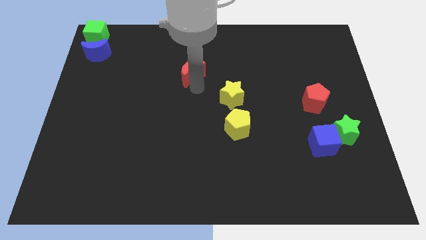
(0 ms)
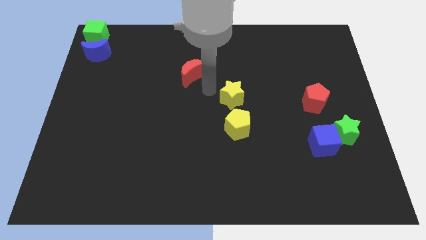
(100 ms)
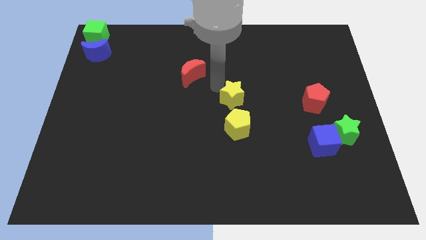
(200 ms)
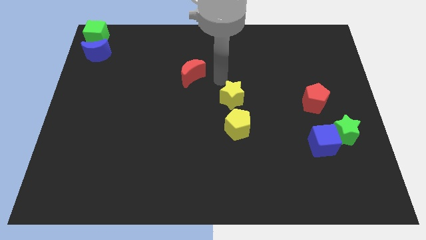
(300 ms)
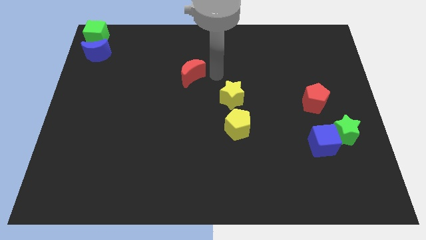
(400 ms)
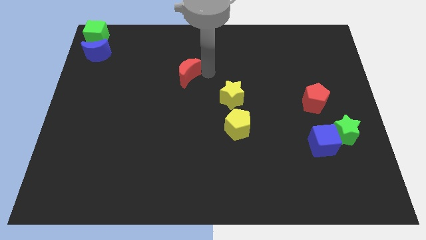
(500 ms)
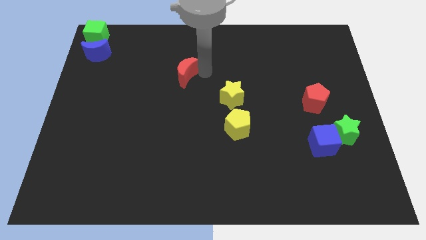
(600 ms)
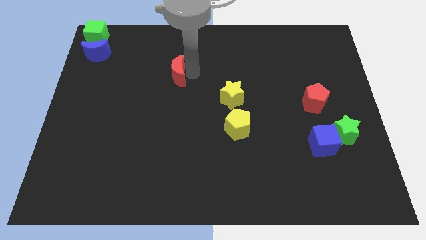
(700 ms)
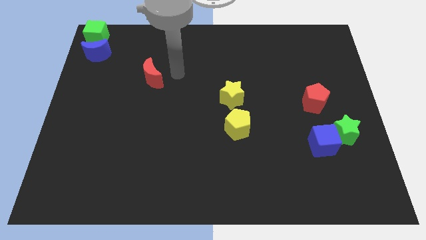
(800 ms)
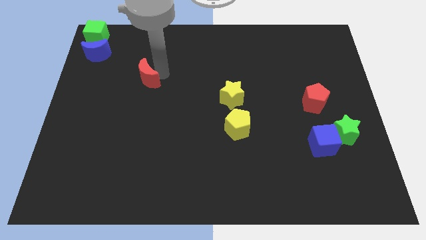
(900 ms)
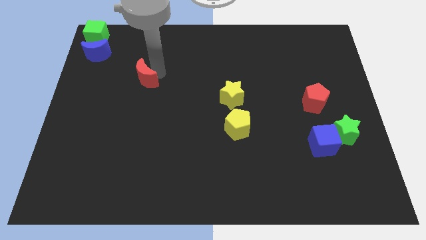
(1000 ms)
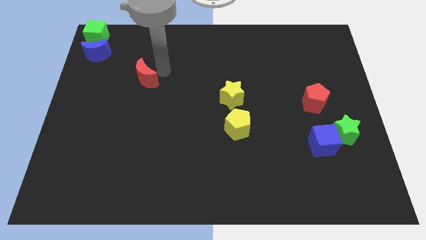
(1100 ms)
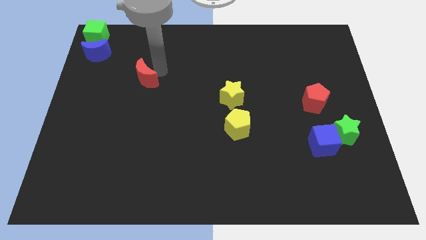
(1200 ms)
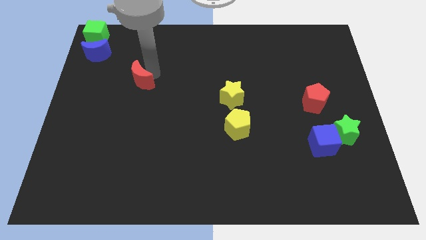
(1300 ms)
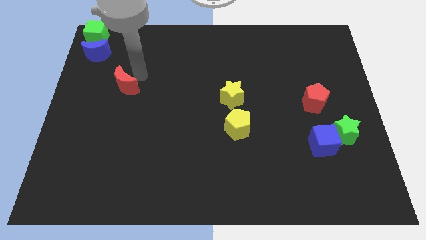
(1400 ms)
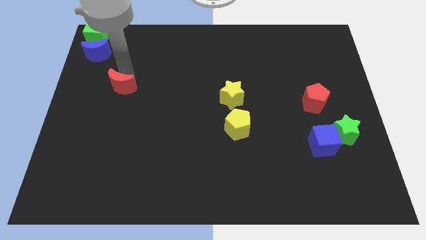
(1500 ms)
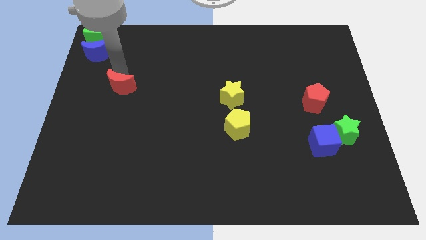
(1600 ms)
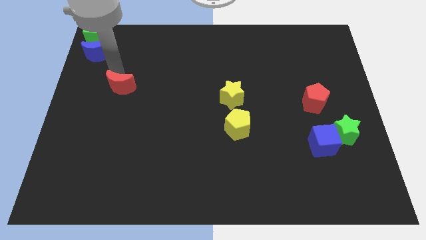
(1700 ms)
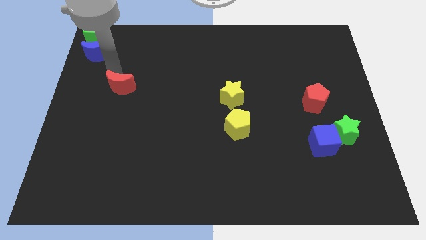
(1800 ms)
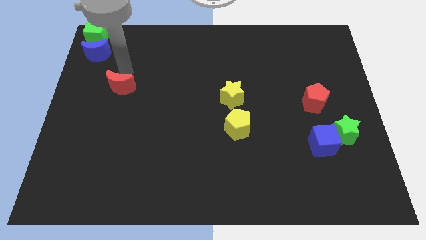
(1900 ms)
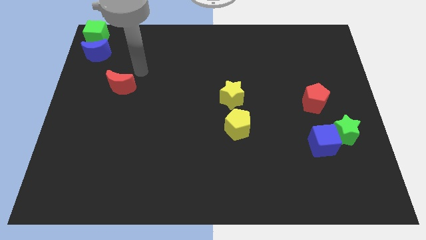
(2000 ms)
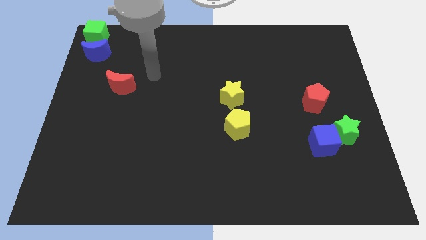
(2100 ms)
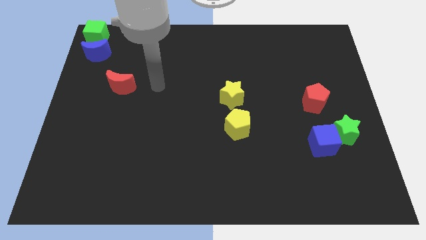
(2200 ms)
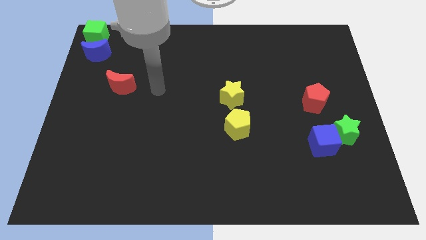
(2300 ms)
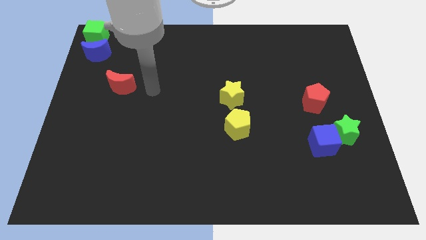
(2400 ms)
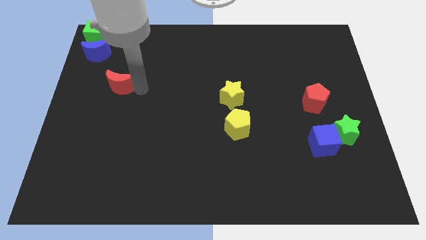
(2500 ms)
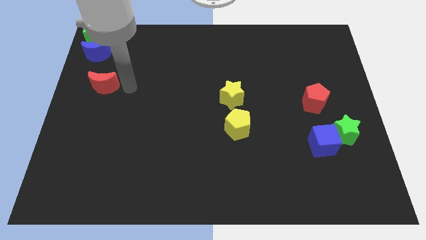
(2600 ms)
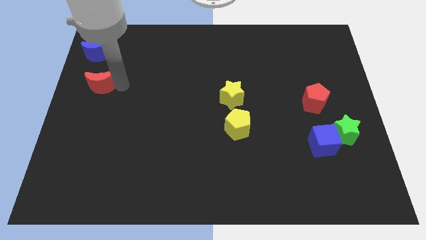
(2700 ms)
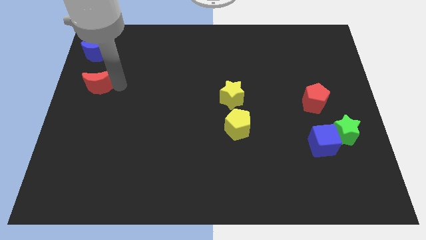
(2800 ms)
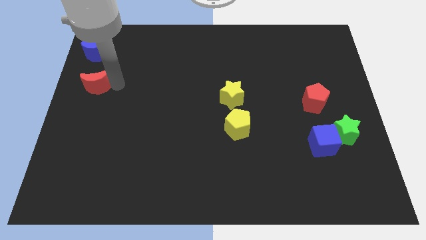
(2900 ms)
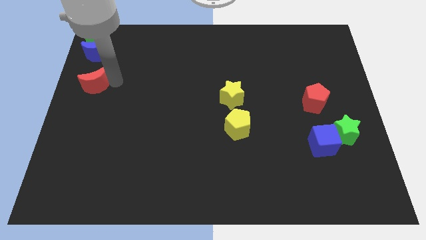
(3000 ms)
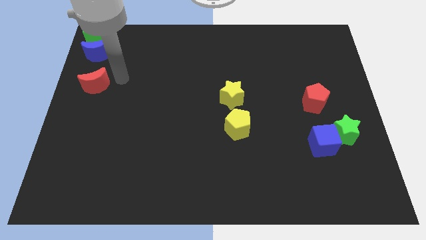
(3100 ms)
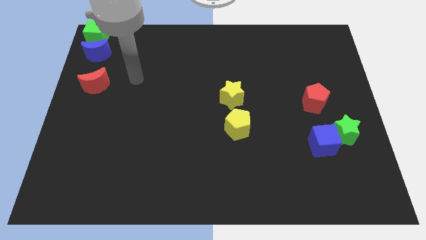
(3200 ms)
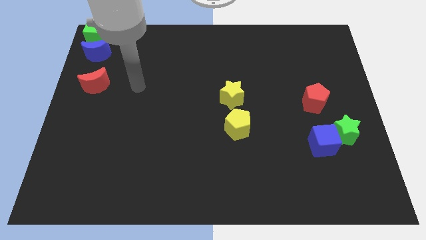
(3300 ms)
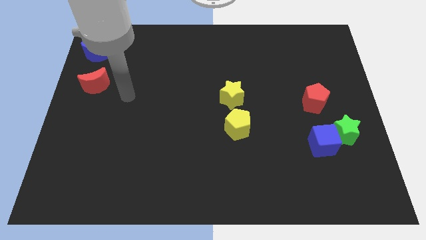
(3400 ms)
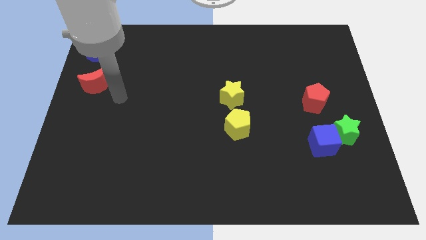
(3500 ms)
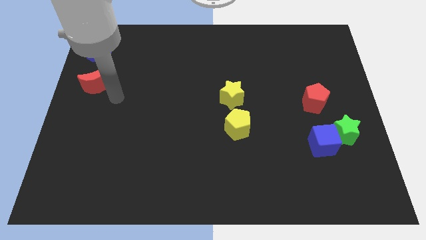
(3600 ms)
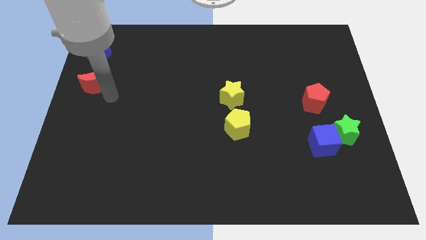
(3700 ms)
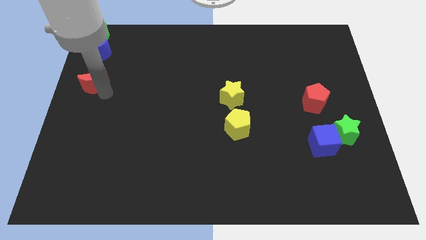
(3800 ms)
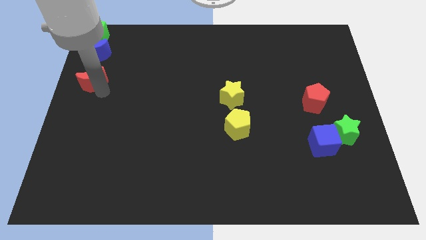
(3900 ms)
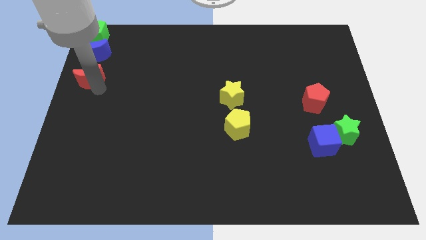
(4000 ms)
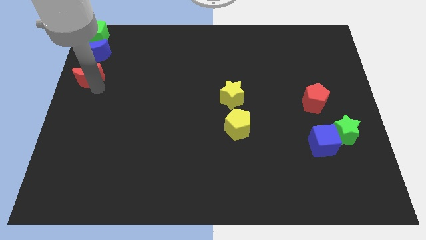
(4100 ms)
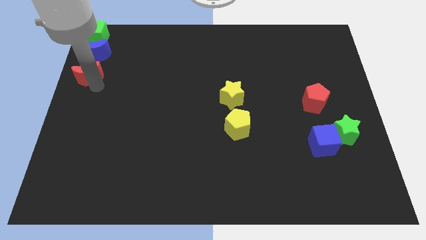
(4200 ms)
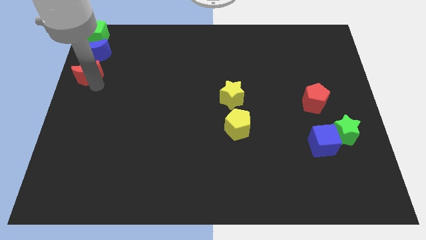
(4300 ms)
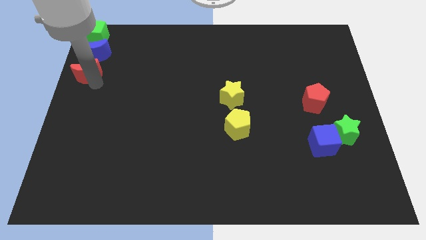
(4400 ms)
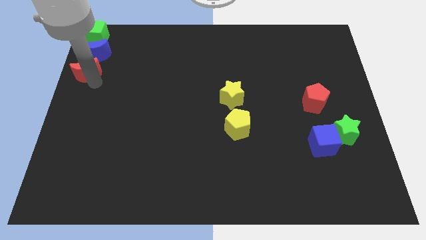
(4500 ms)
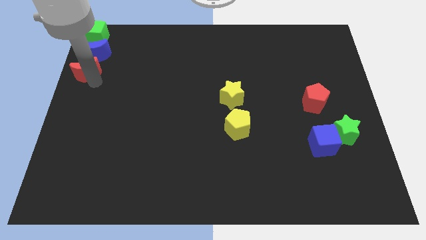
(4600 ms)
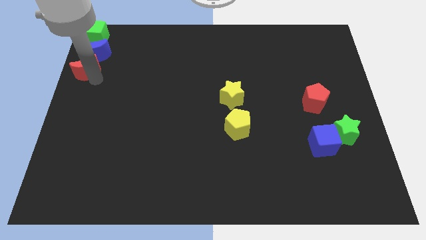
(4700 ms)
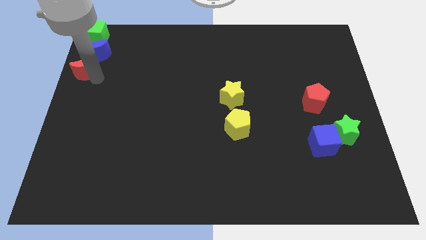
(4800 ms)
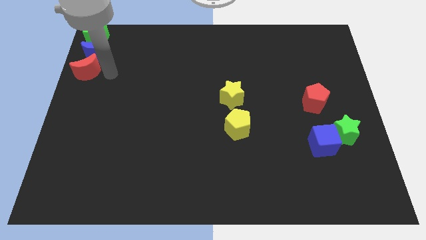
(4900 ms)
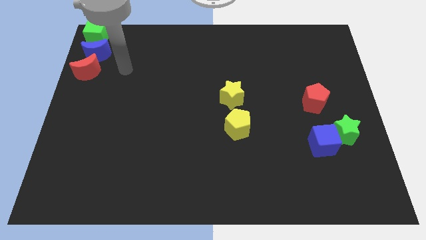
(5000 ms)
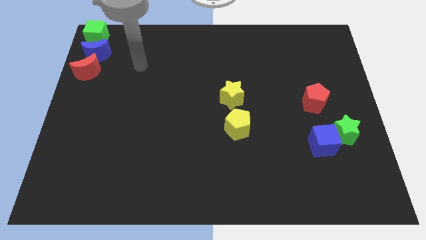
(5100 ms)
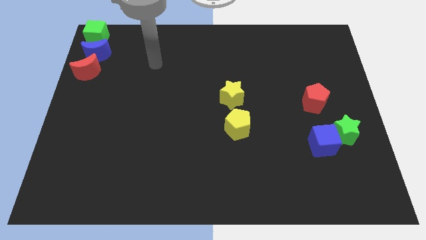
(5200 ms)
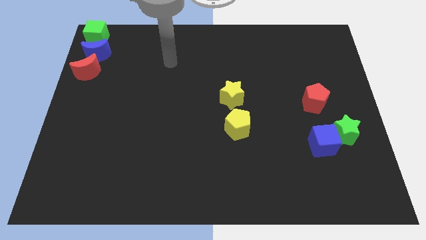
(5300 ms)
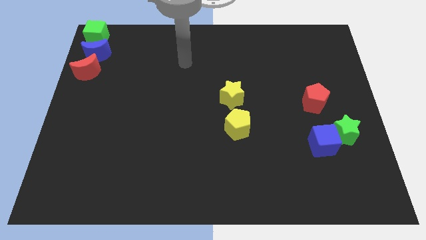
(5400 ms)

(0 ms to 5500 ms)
place the red moon below the blue moon

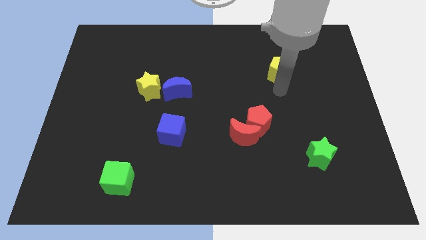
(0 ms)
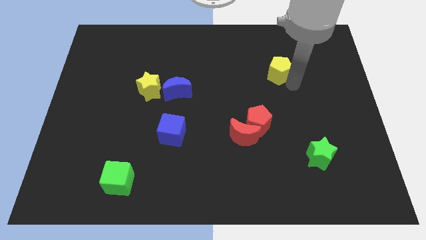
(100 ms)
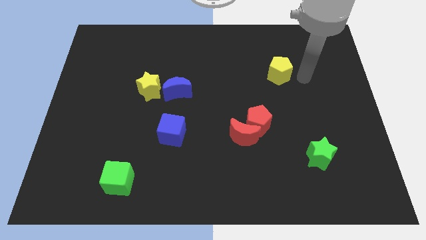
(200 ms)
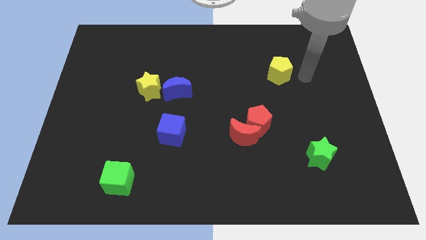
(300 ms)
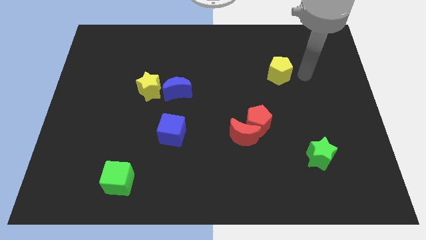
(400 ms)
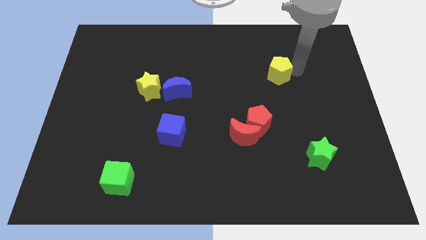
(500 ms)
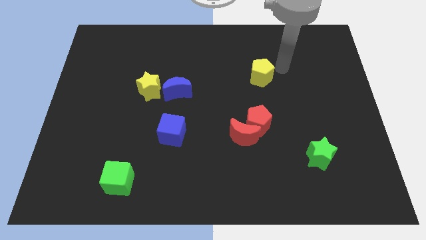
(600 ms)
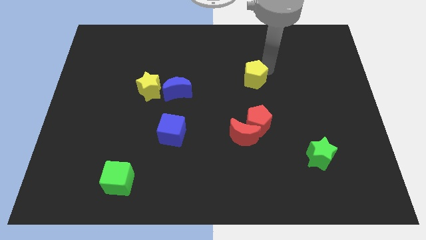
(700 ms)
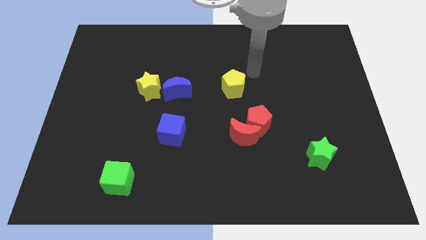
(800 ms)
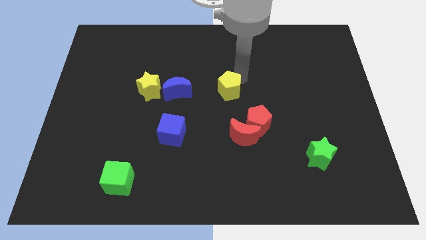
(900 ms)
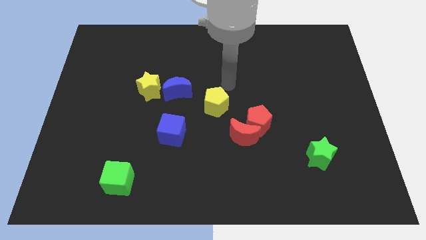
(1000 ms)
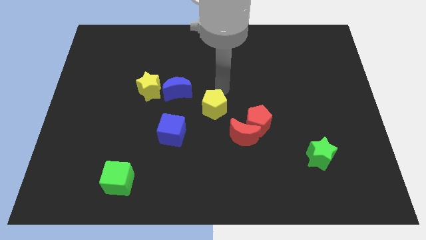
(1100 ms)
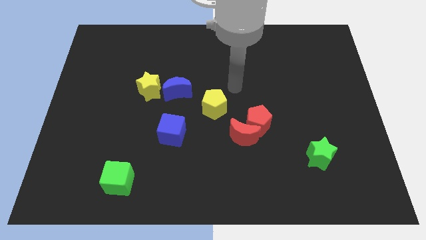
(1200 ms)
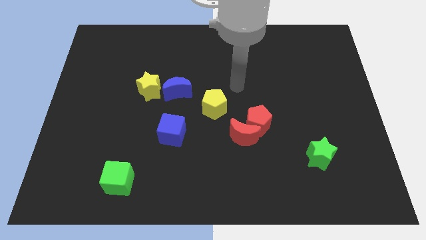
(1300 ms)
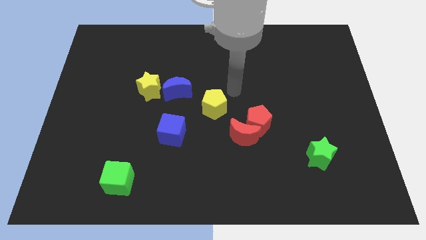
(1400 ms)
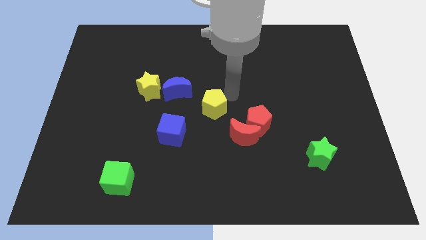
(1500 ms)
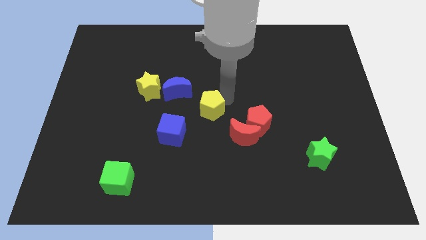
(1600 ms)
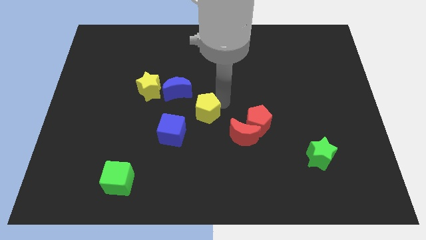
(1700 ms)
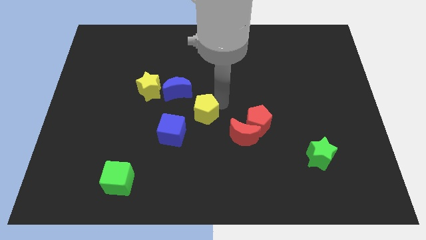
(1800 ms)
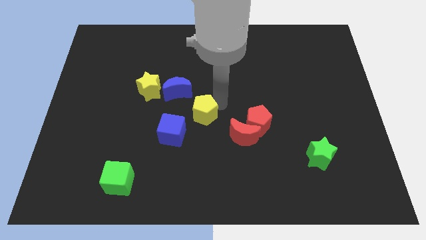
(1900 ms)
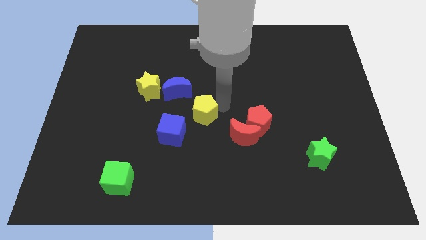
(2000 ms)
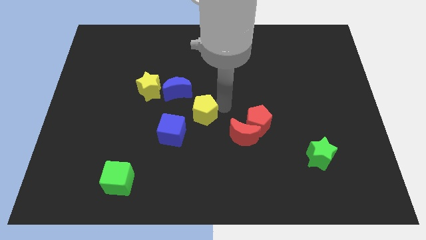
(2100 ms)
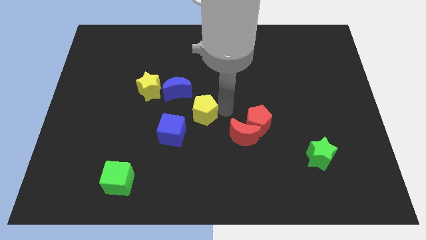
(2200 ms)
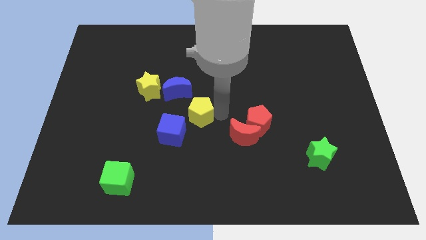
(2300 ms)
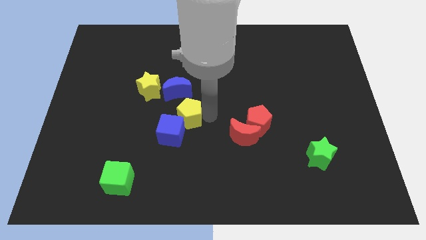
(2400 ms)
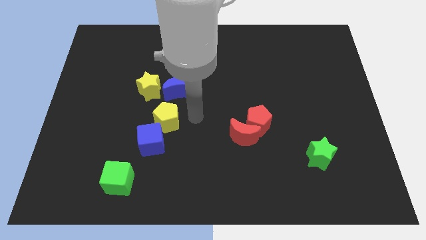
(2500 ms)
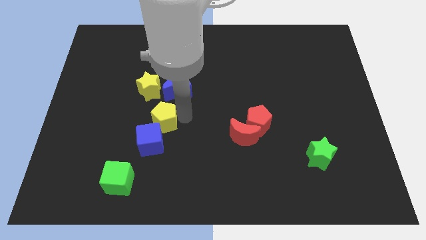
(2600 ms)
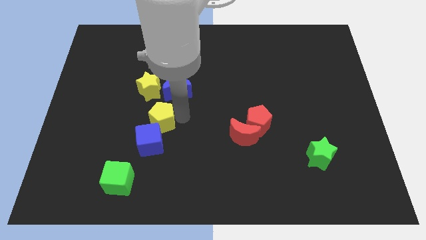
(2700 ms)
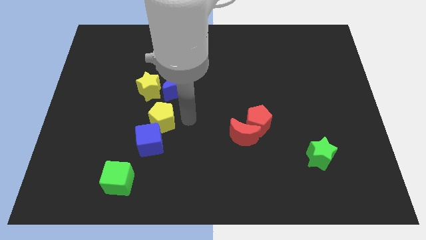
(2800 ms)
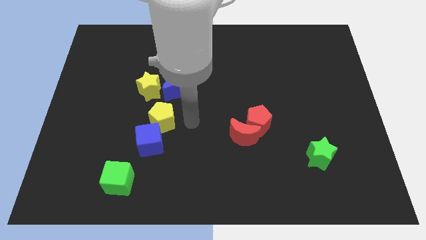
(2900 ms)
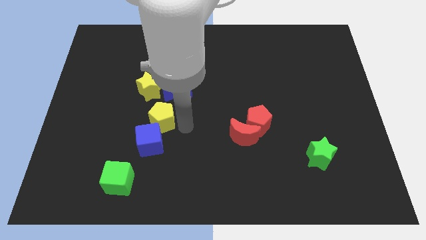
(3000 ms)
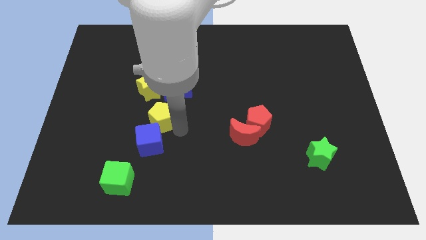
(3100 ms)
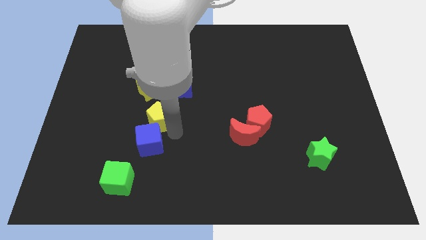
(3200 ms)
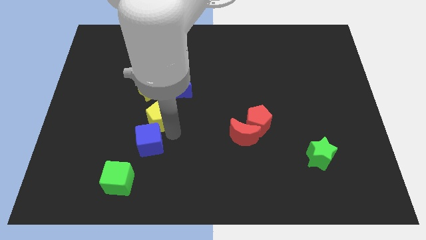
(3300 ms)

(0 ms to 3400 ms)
place the yellow pentagon towards the top right side of the blue cube

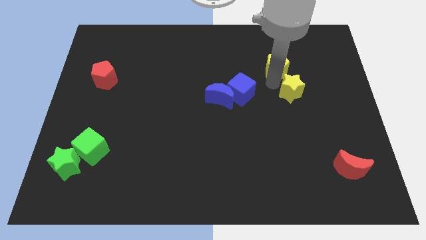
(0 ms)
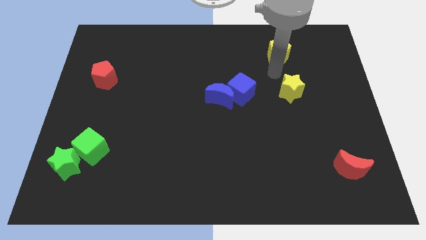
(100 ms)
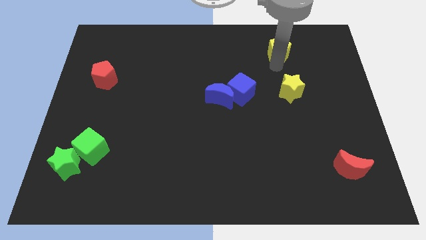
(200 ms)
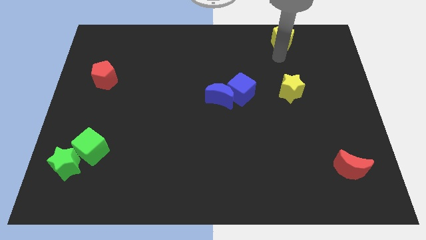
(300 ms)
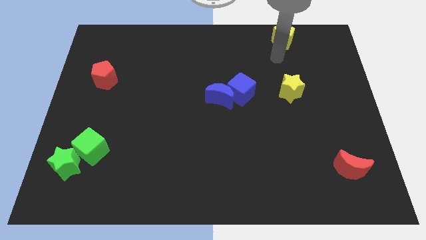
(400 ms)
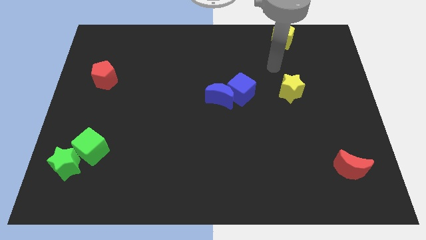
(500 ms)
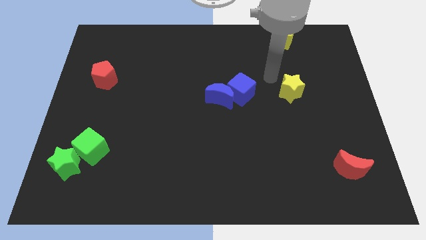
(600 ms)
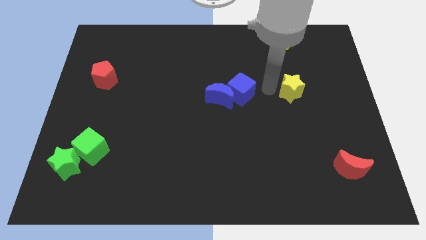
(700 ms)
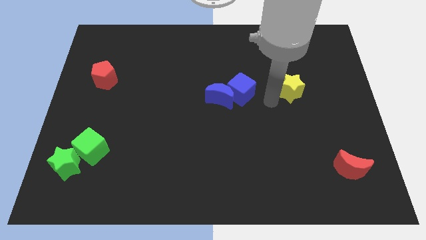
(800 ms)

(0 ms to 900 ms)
push the yellow pentagon towards top
